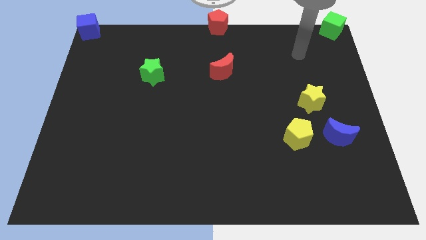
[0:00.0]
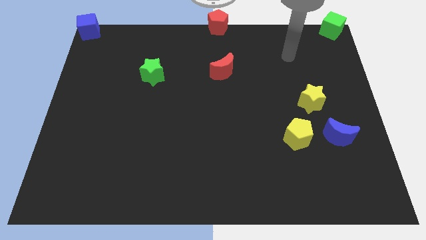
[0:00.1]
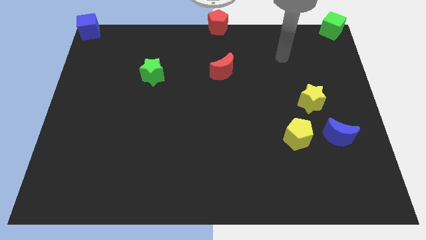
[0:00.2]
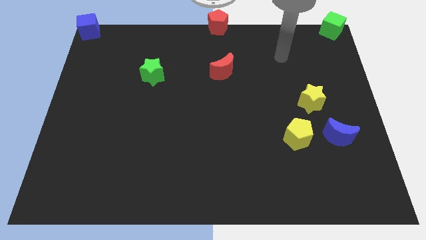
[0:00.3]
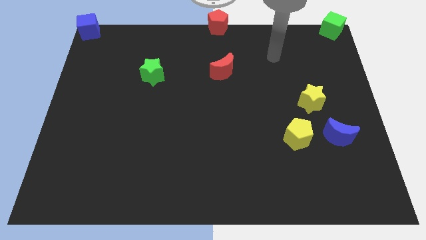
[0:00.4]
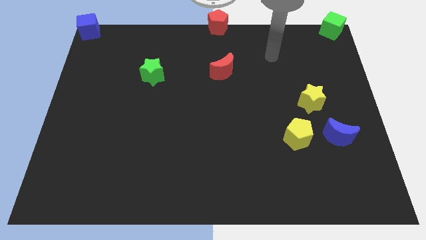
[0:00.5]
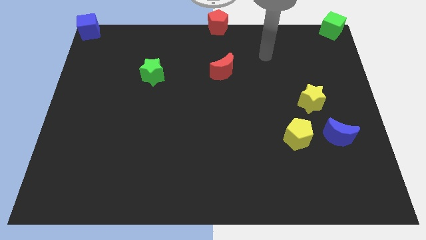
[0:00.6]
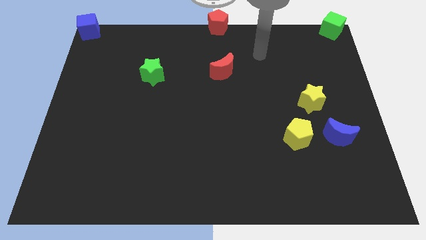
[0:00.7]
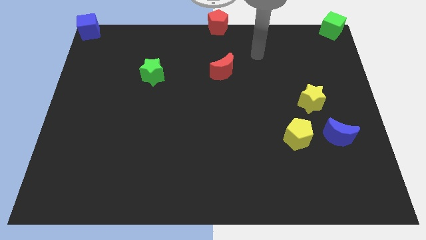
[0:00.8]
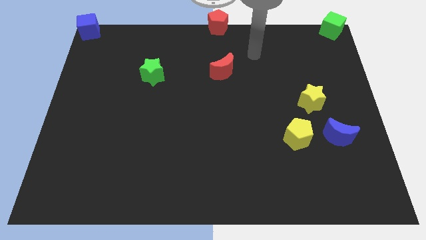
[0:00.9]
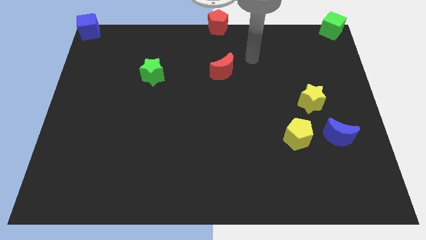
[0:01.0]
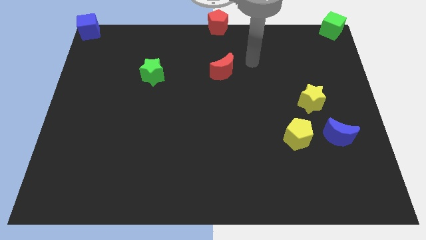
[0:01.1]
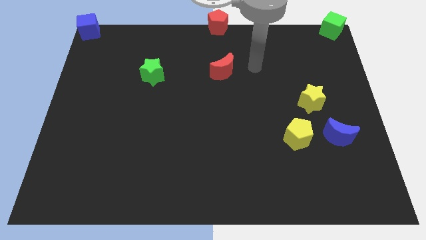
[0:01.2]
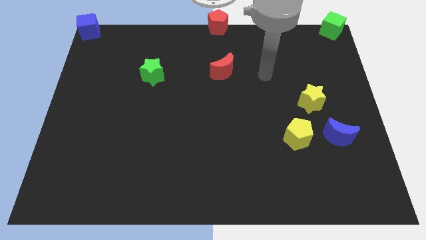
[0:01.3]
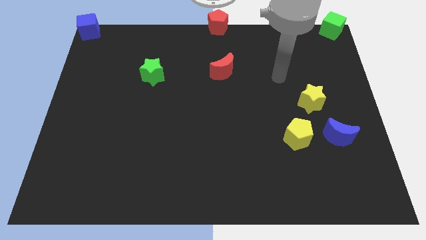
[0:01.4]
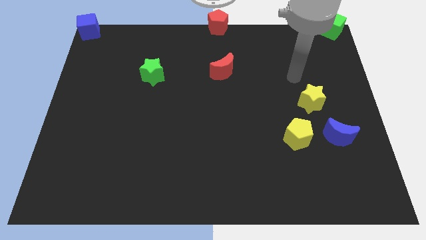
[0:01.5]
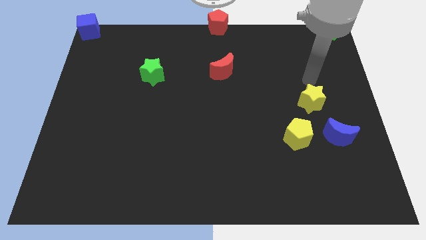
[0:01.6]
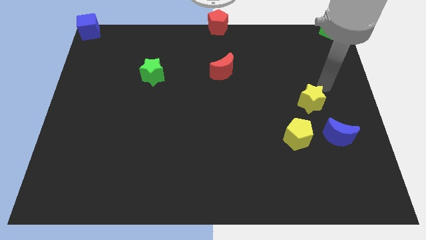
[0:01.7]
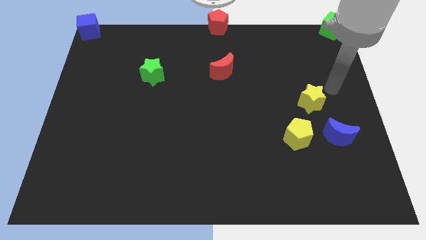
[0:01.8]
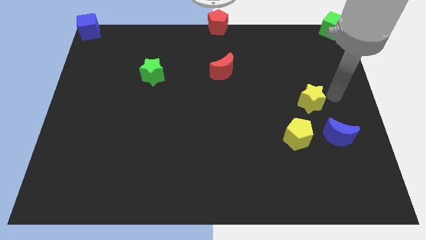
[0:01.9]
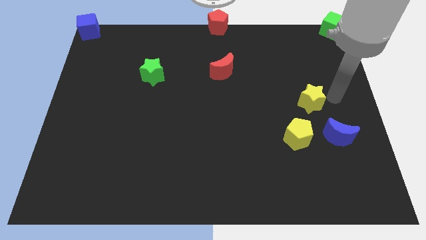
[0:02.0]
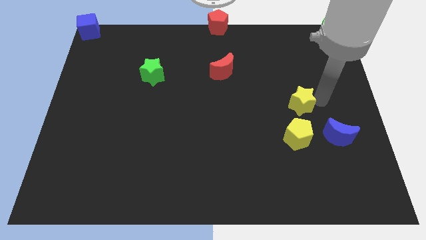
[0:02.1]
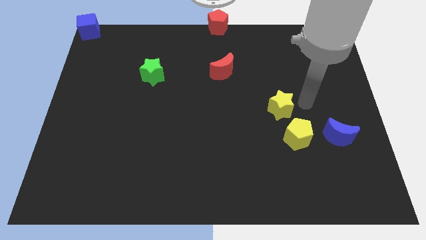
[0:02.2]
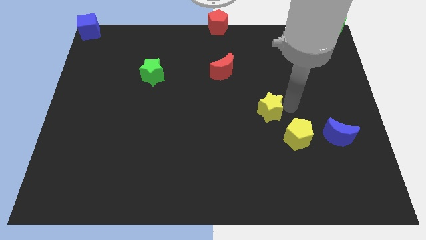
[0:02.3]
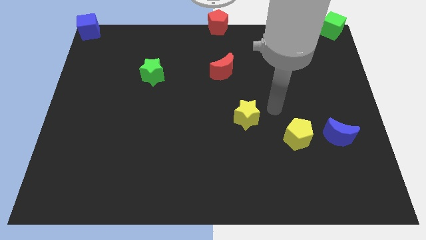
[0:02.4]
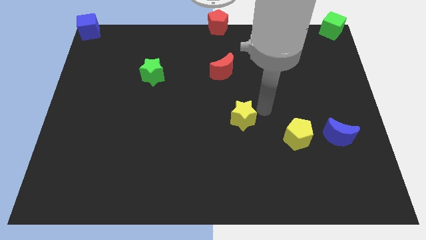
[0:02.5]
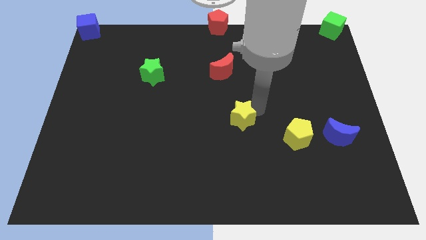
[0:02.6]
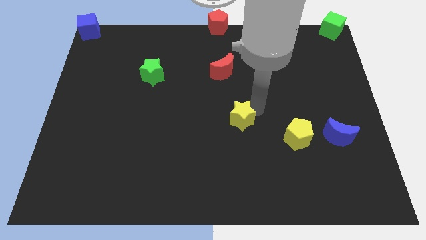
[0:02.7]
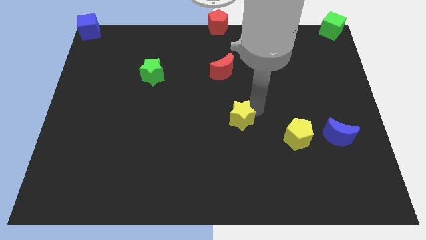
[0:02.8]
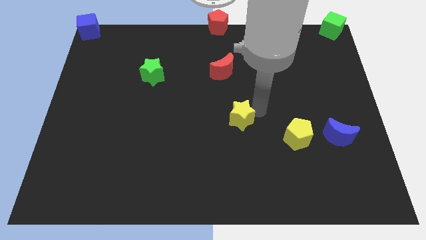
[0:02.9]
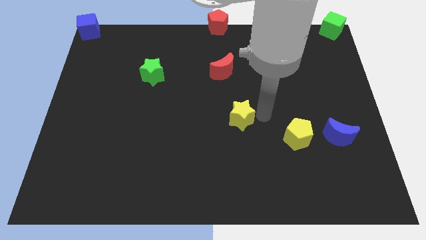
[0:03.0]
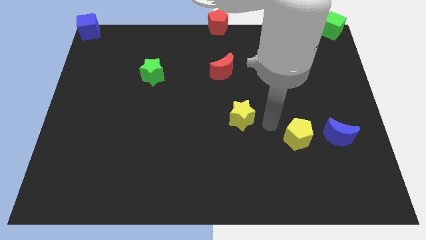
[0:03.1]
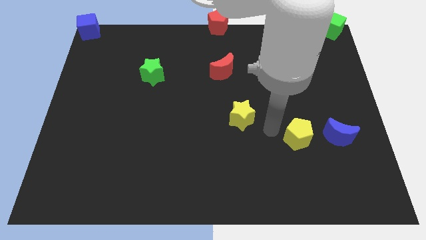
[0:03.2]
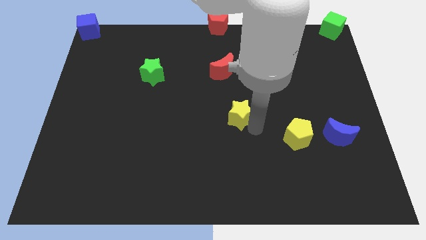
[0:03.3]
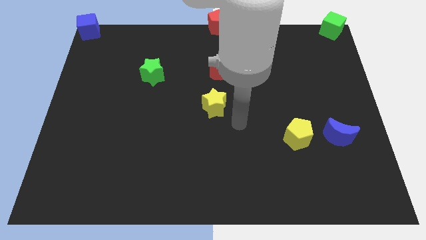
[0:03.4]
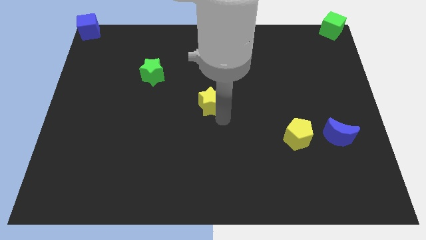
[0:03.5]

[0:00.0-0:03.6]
move the yellow star towards the center of the board

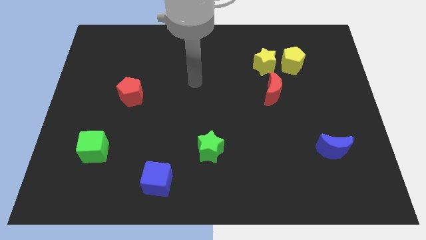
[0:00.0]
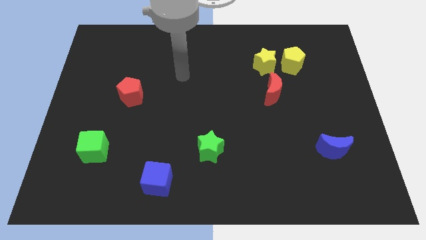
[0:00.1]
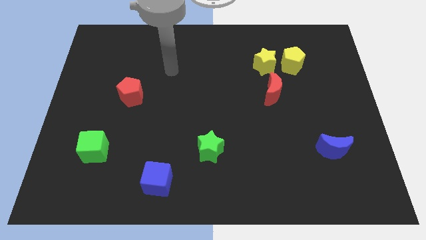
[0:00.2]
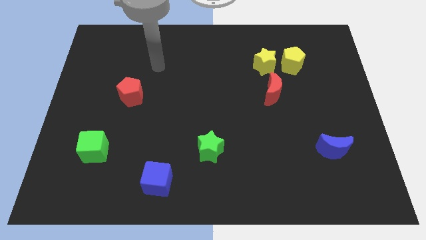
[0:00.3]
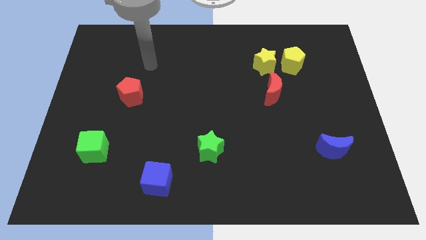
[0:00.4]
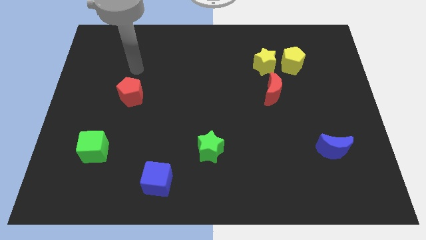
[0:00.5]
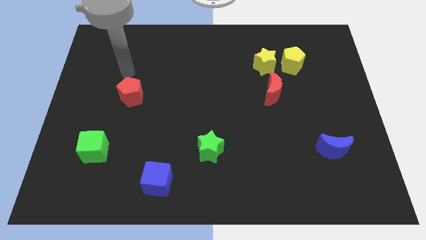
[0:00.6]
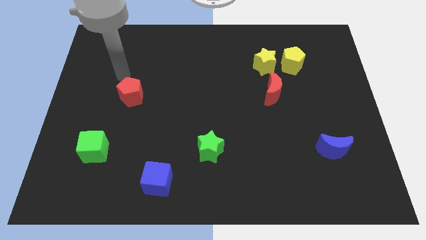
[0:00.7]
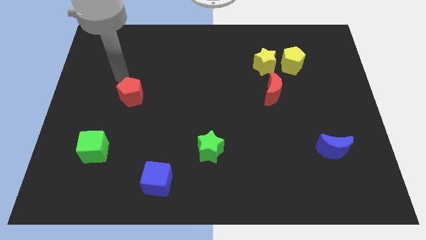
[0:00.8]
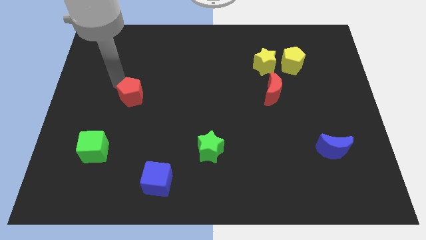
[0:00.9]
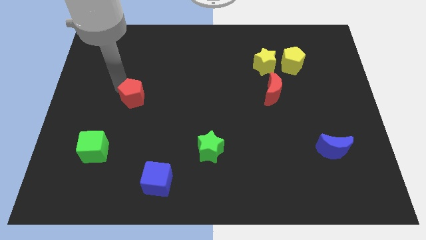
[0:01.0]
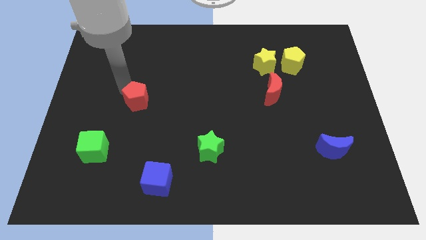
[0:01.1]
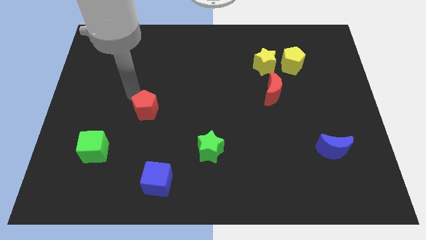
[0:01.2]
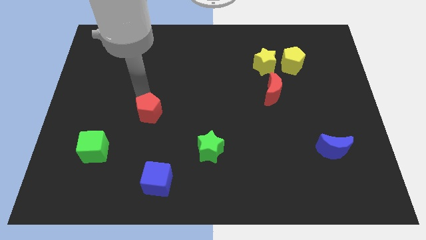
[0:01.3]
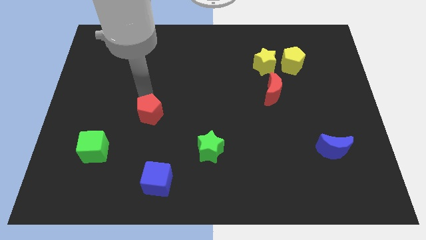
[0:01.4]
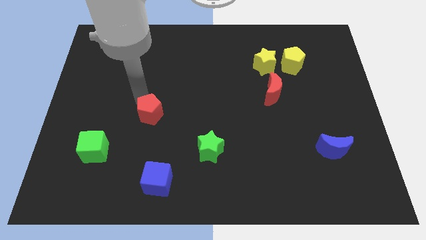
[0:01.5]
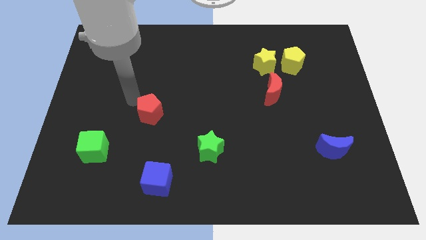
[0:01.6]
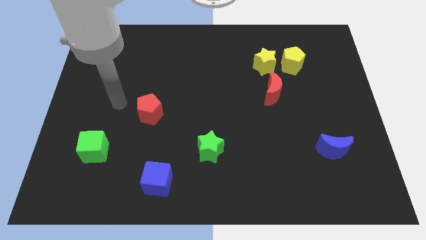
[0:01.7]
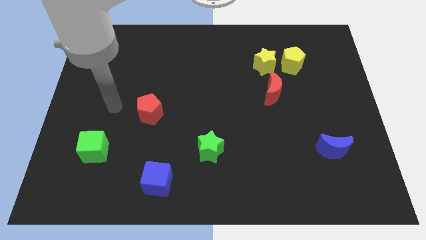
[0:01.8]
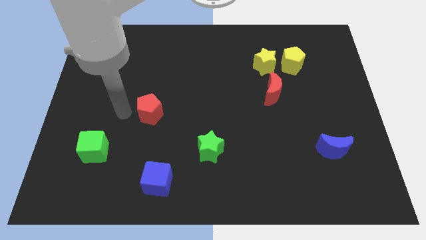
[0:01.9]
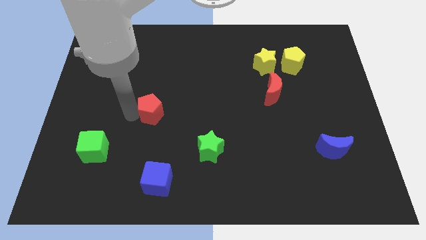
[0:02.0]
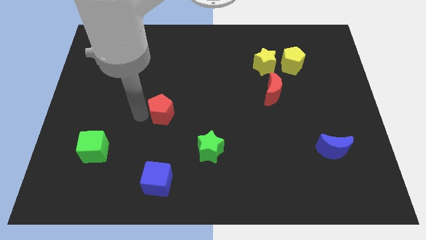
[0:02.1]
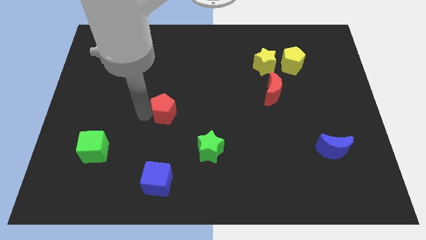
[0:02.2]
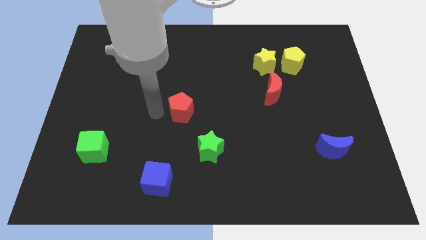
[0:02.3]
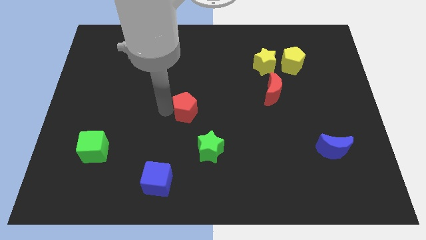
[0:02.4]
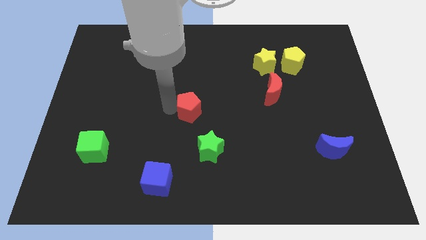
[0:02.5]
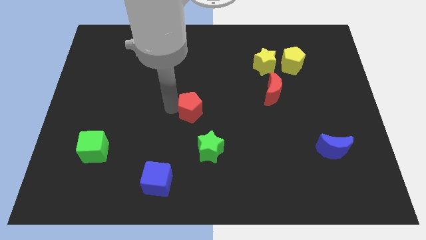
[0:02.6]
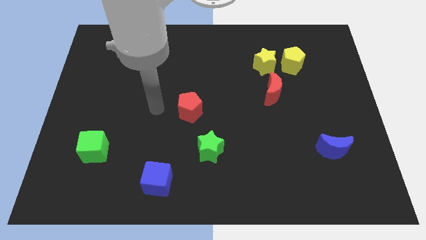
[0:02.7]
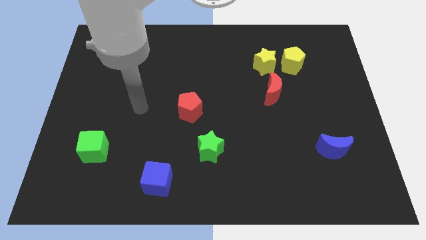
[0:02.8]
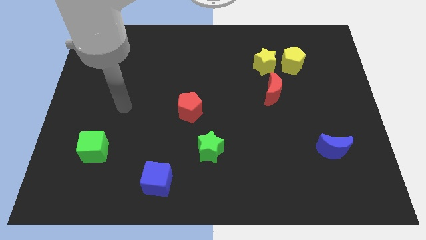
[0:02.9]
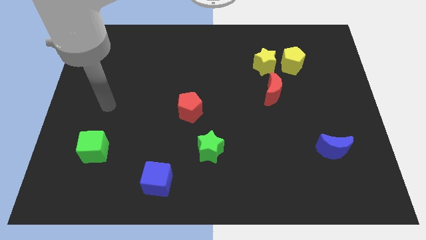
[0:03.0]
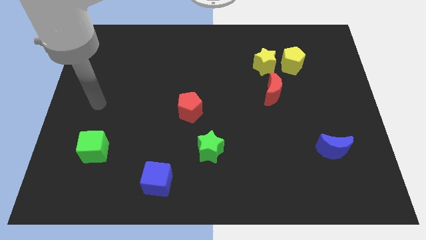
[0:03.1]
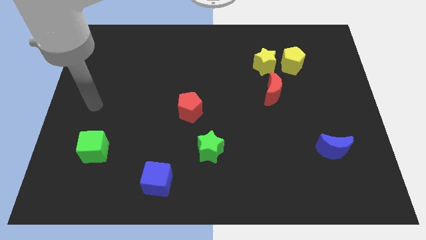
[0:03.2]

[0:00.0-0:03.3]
move the red pentagon to the top left of the green star

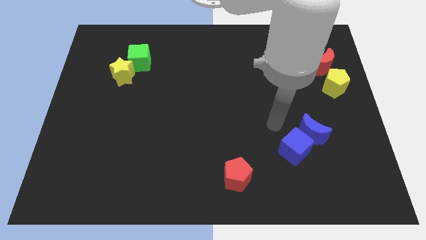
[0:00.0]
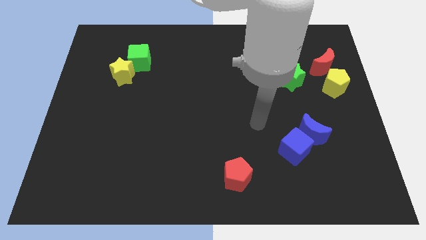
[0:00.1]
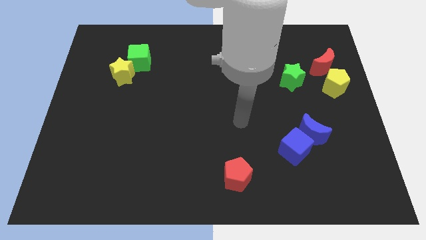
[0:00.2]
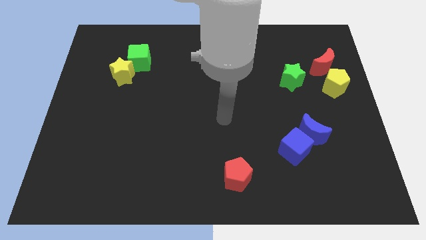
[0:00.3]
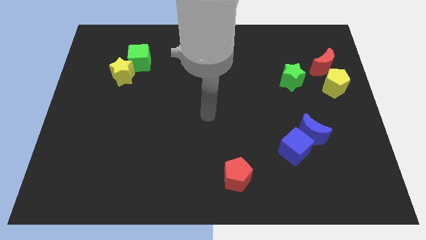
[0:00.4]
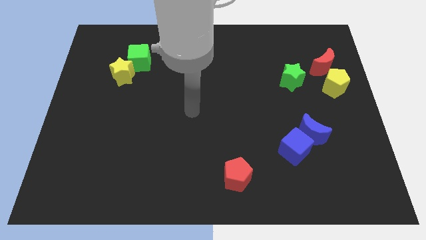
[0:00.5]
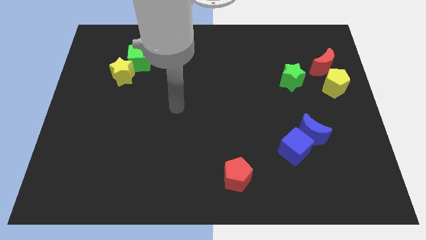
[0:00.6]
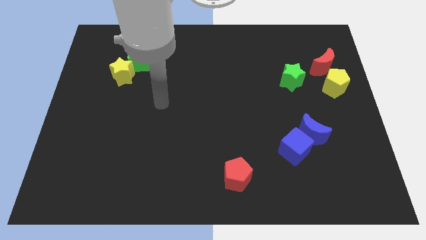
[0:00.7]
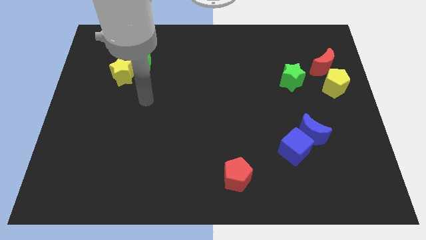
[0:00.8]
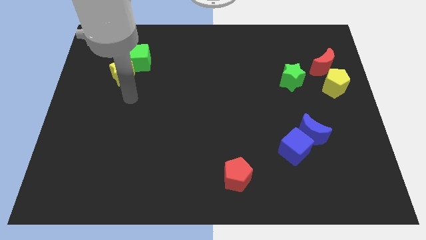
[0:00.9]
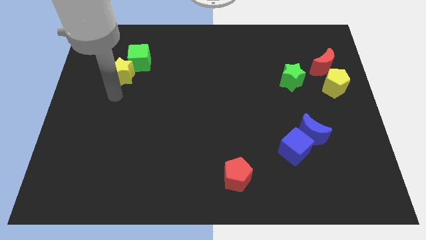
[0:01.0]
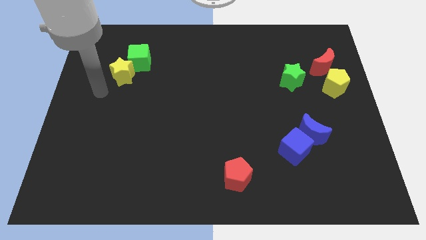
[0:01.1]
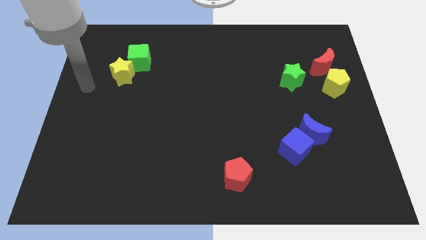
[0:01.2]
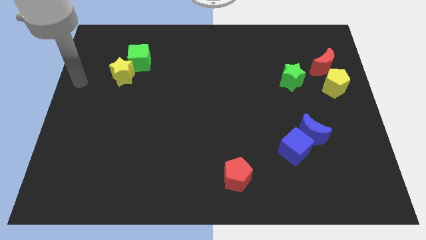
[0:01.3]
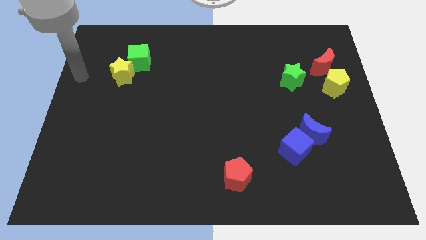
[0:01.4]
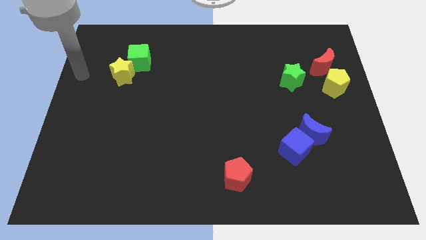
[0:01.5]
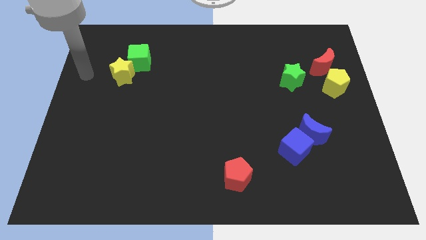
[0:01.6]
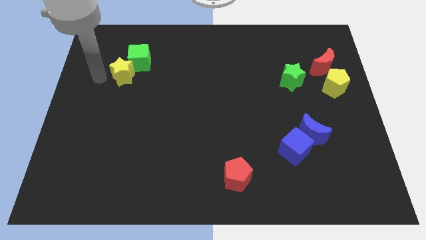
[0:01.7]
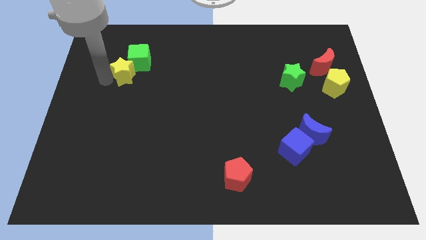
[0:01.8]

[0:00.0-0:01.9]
touch the left side of the yellow star
